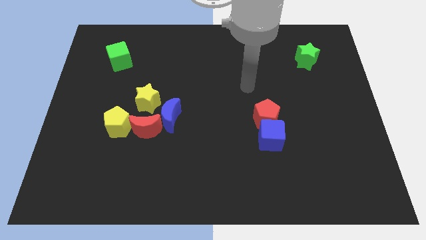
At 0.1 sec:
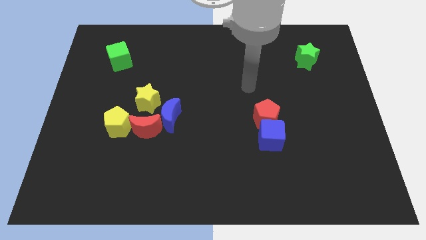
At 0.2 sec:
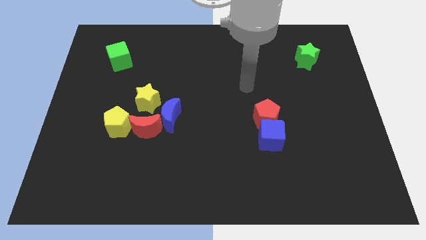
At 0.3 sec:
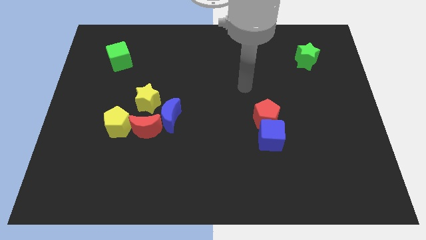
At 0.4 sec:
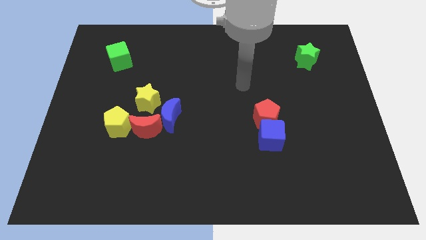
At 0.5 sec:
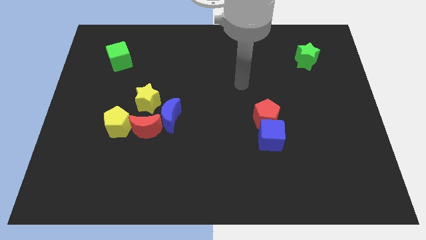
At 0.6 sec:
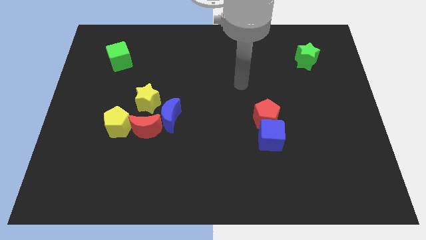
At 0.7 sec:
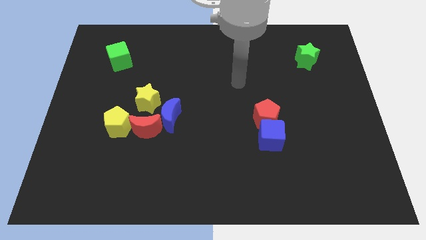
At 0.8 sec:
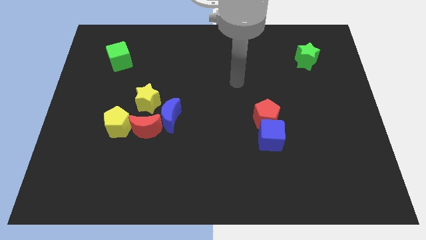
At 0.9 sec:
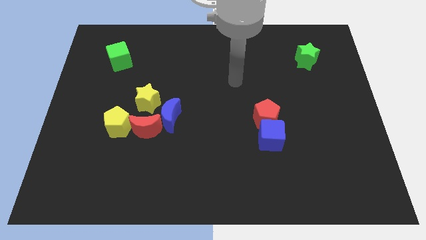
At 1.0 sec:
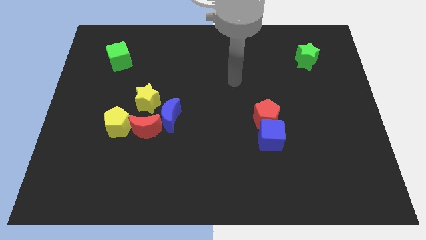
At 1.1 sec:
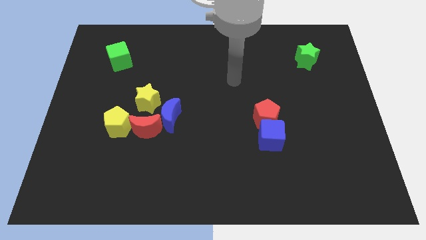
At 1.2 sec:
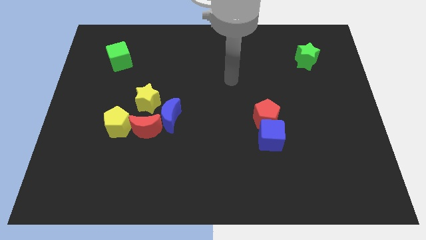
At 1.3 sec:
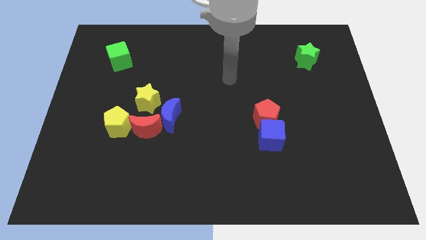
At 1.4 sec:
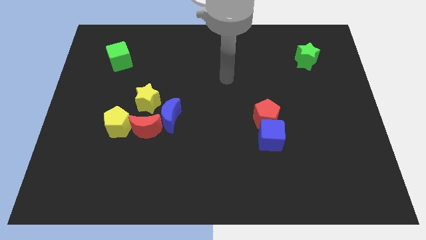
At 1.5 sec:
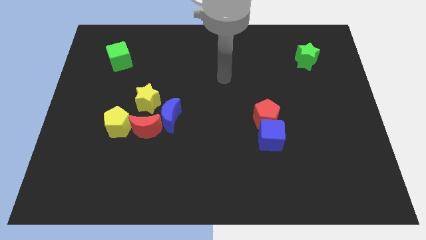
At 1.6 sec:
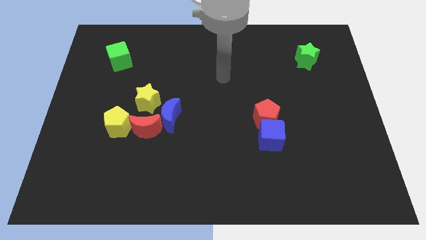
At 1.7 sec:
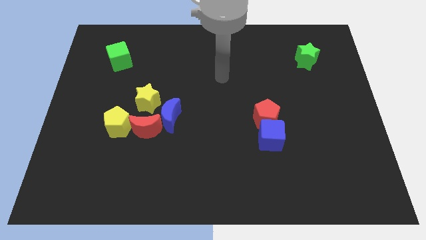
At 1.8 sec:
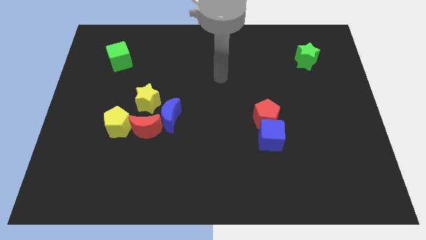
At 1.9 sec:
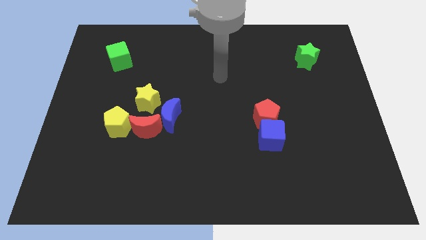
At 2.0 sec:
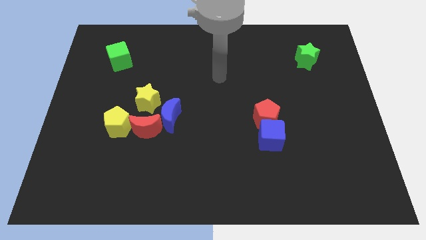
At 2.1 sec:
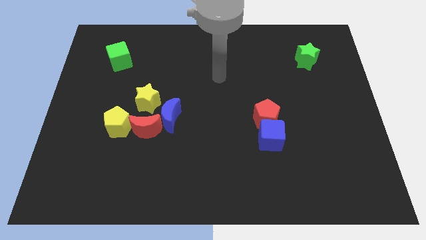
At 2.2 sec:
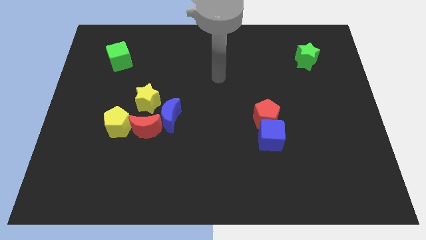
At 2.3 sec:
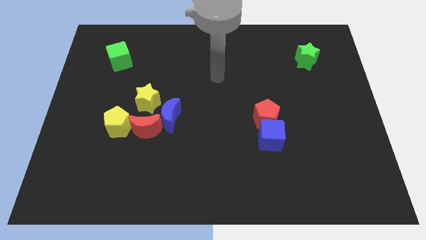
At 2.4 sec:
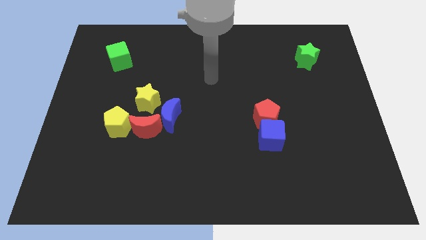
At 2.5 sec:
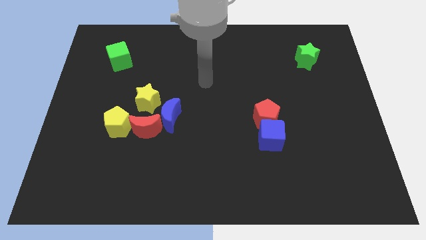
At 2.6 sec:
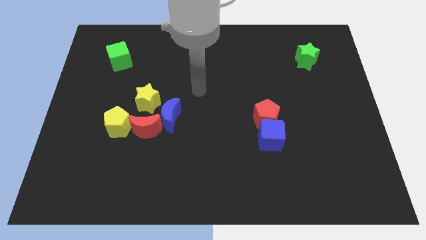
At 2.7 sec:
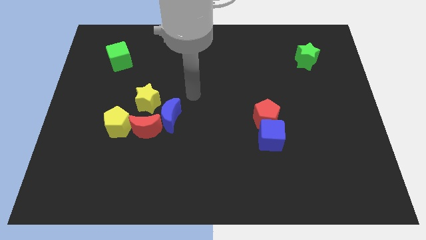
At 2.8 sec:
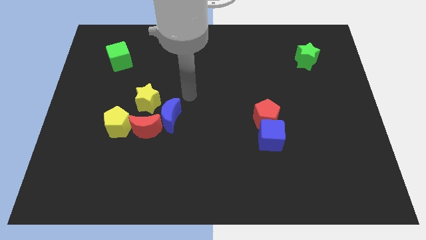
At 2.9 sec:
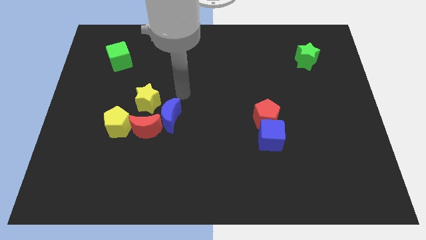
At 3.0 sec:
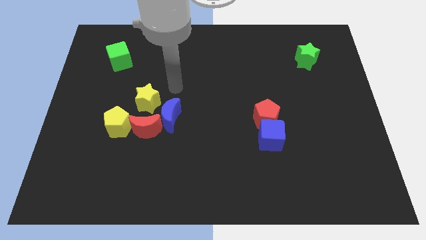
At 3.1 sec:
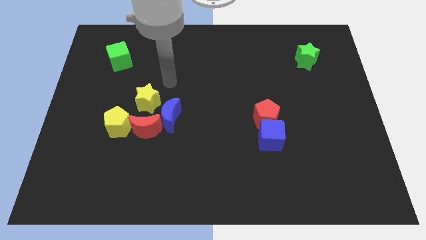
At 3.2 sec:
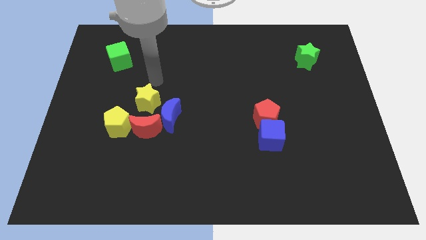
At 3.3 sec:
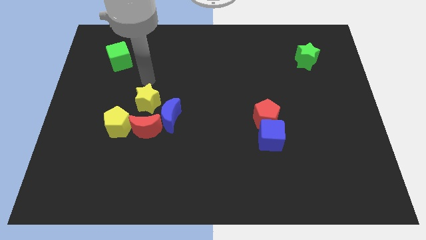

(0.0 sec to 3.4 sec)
put your hand vertically above the yellow star

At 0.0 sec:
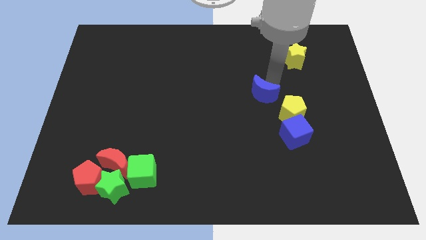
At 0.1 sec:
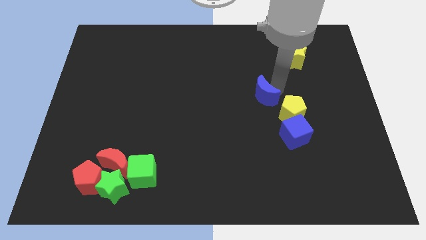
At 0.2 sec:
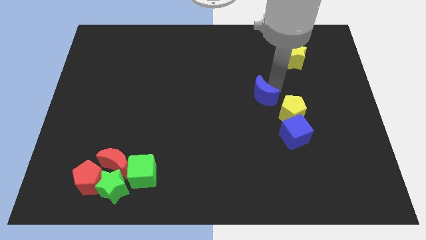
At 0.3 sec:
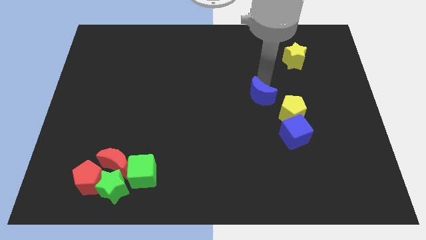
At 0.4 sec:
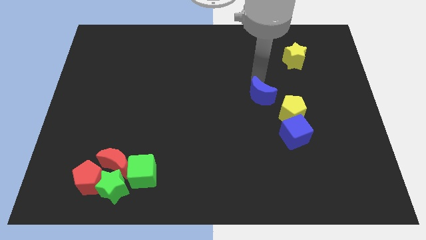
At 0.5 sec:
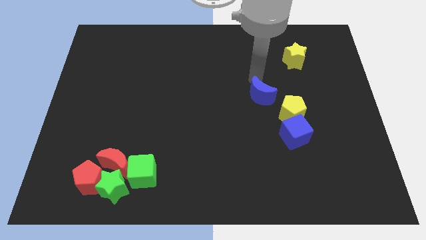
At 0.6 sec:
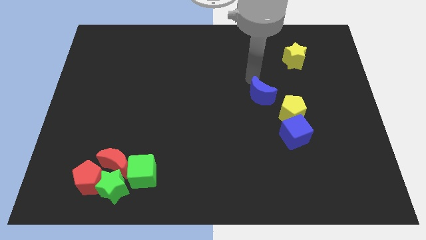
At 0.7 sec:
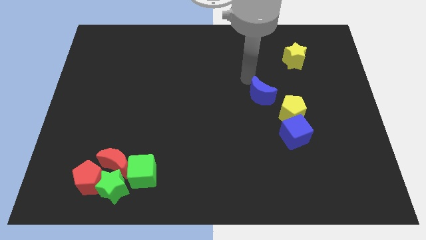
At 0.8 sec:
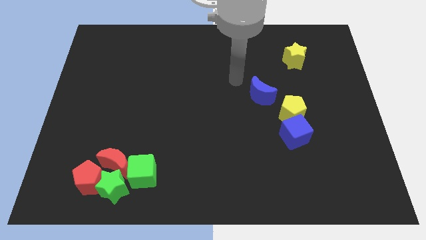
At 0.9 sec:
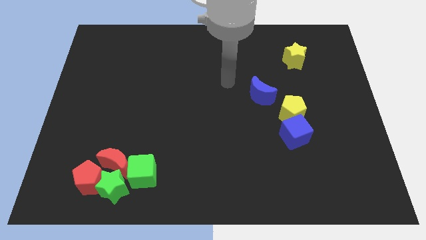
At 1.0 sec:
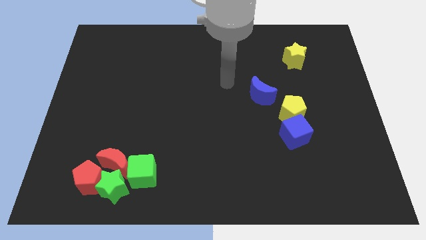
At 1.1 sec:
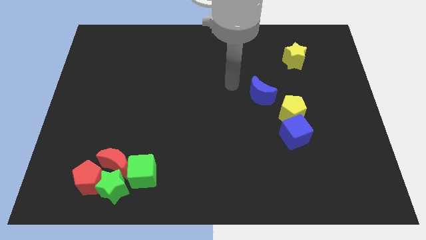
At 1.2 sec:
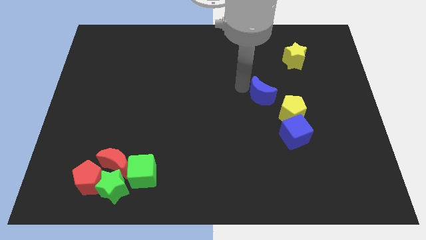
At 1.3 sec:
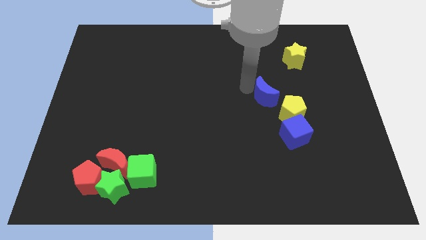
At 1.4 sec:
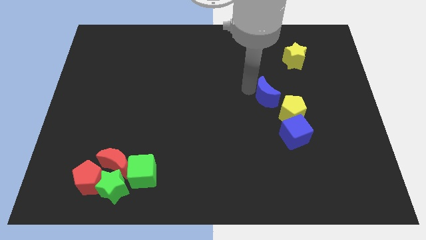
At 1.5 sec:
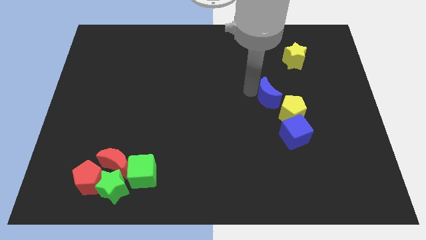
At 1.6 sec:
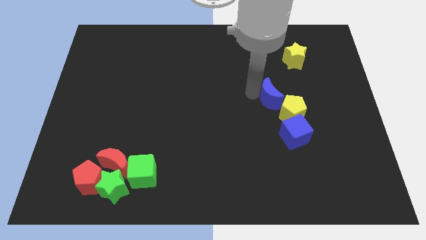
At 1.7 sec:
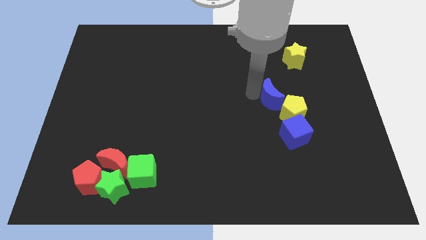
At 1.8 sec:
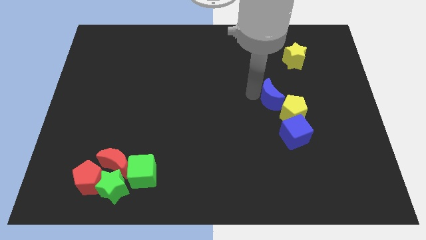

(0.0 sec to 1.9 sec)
push the blue moon into the yellow pentagon

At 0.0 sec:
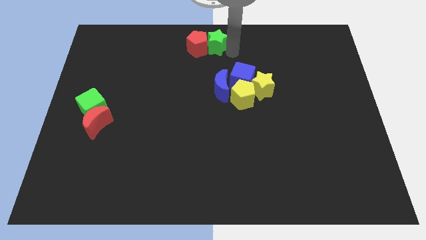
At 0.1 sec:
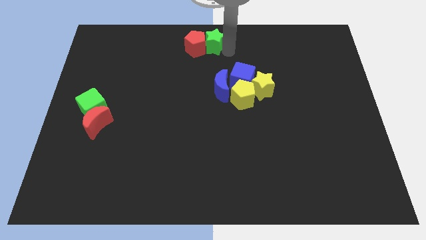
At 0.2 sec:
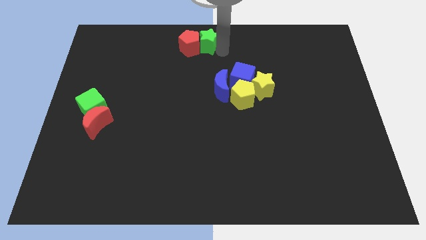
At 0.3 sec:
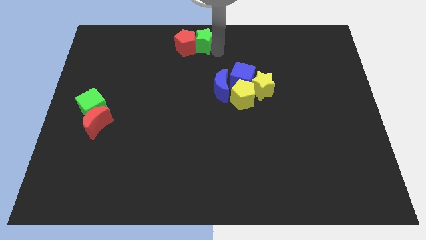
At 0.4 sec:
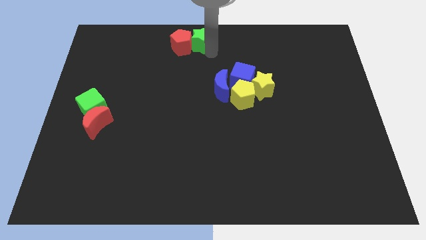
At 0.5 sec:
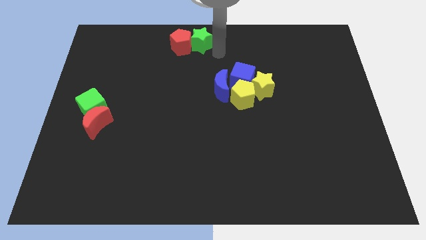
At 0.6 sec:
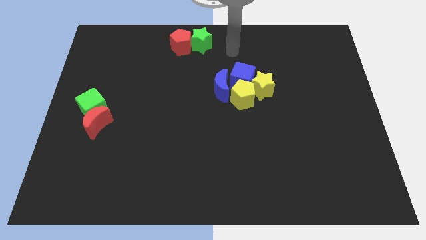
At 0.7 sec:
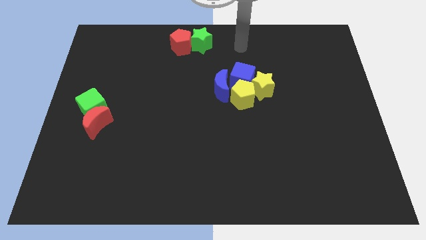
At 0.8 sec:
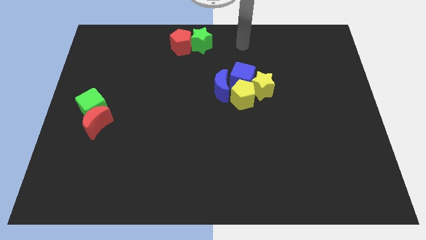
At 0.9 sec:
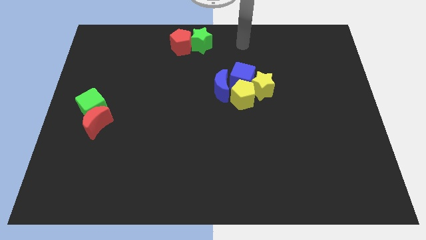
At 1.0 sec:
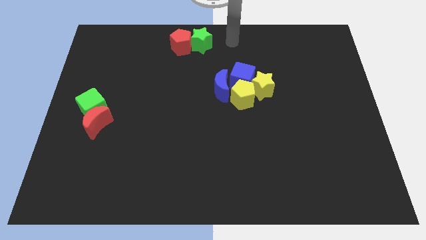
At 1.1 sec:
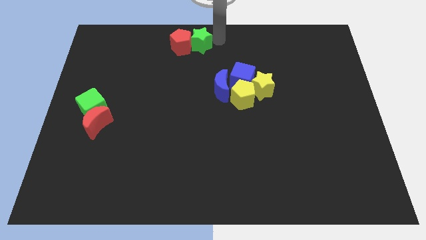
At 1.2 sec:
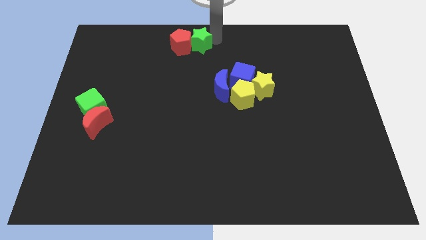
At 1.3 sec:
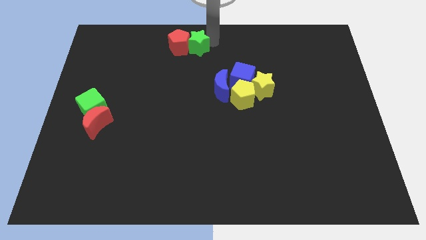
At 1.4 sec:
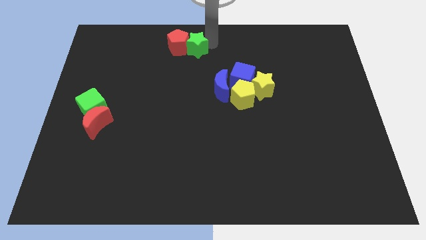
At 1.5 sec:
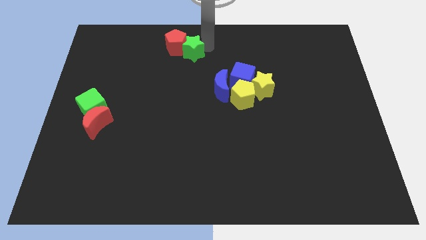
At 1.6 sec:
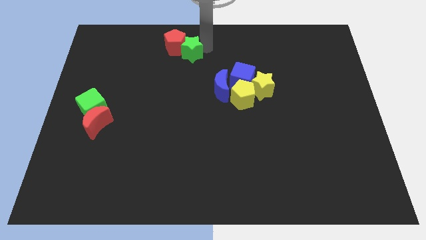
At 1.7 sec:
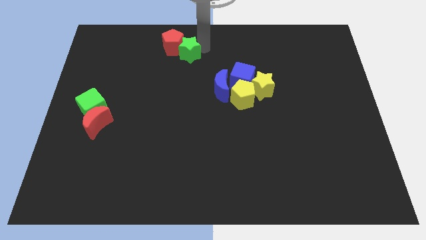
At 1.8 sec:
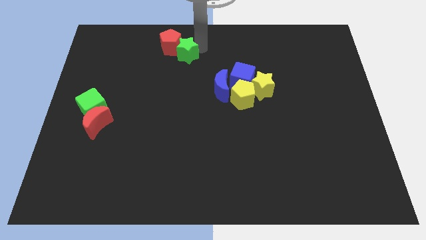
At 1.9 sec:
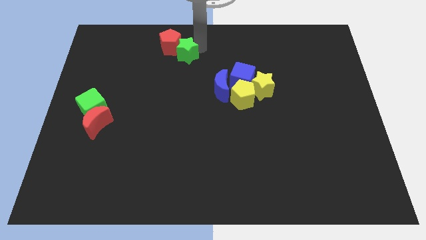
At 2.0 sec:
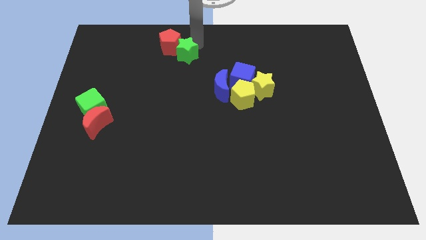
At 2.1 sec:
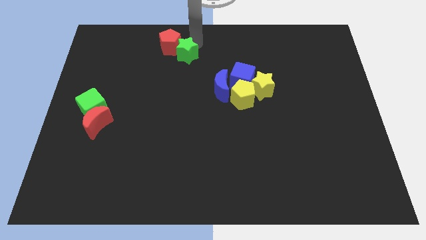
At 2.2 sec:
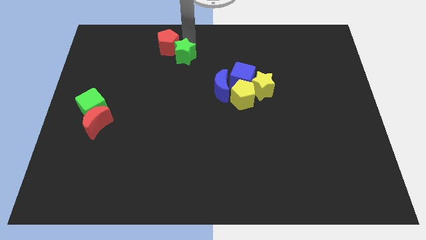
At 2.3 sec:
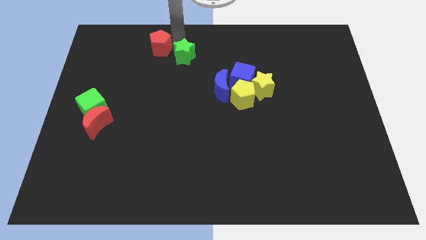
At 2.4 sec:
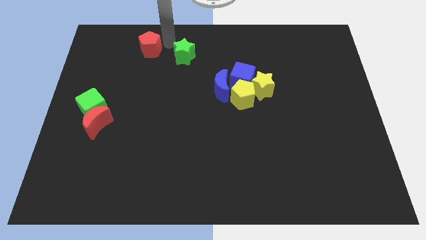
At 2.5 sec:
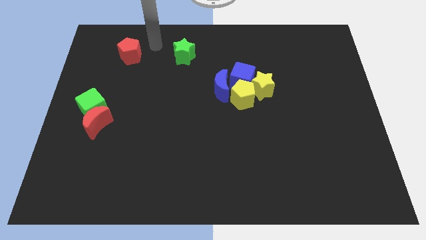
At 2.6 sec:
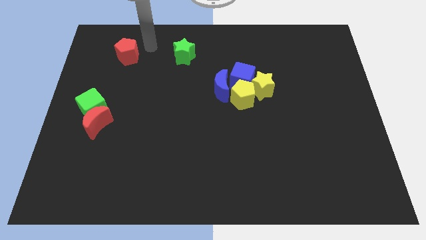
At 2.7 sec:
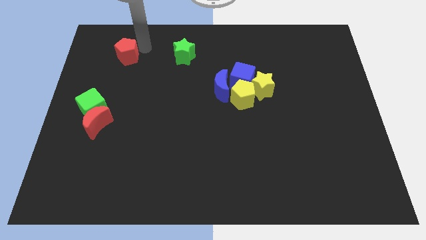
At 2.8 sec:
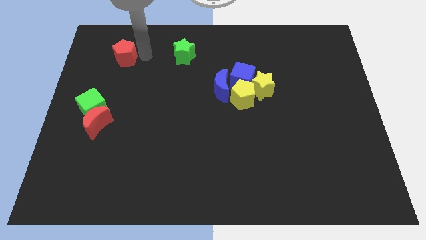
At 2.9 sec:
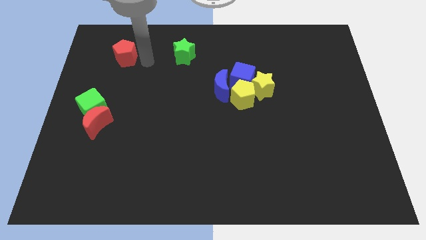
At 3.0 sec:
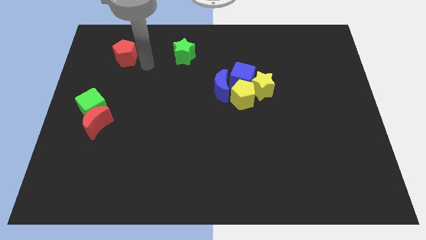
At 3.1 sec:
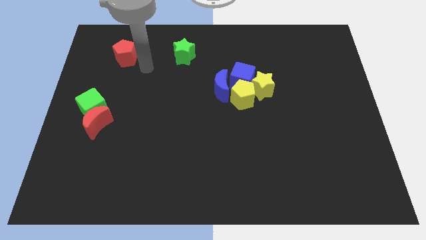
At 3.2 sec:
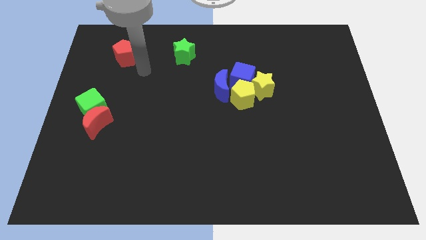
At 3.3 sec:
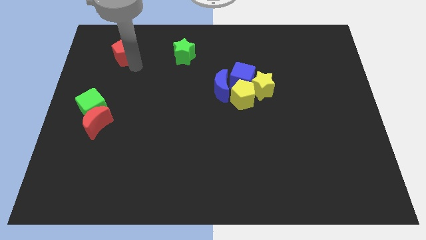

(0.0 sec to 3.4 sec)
separate the green star from the red pentagon

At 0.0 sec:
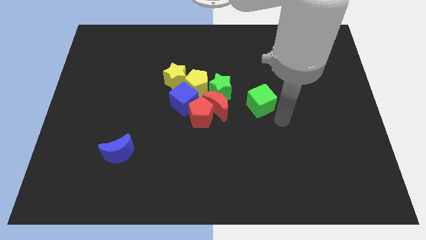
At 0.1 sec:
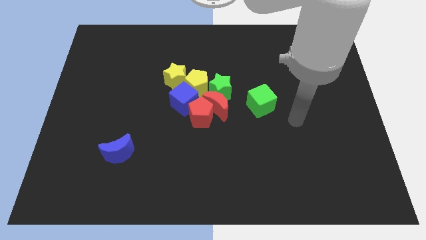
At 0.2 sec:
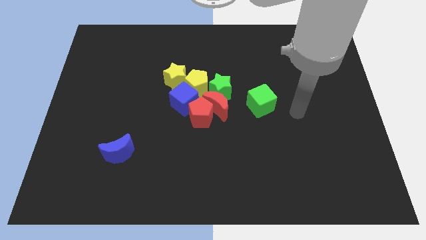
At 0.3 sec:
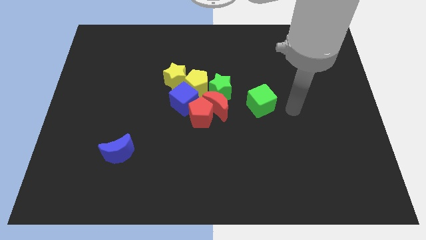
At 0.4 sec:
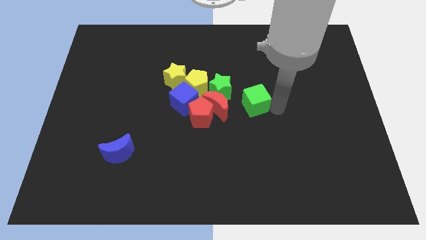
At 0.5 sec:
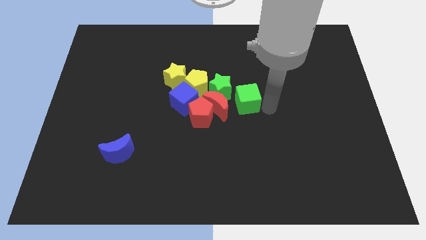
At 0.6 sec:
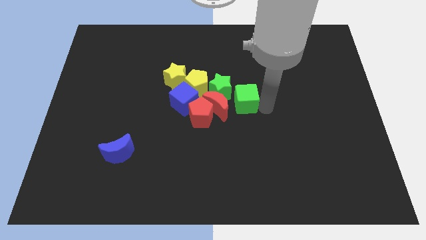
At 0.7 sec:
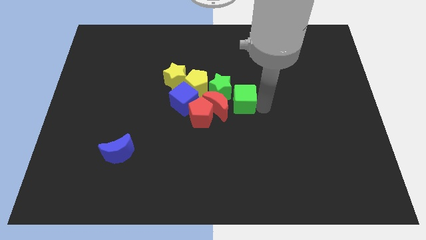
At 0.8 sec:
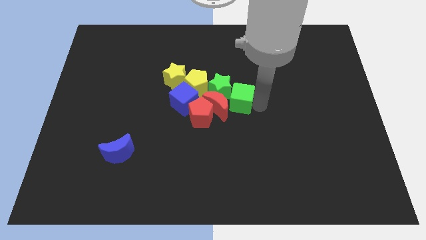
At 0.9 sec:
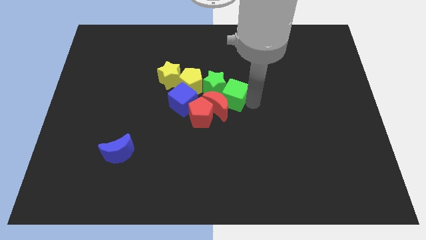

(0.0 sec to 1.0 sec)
move the green cube to the right of the green star
